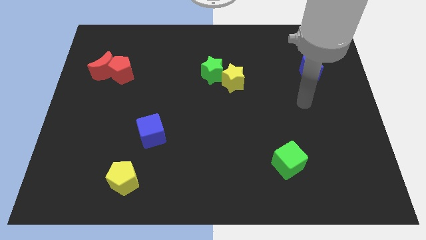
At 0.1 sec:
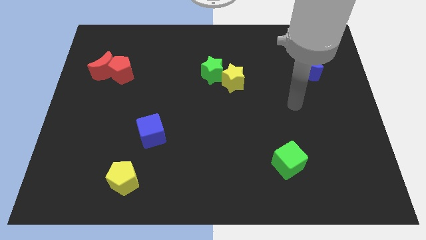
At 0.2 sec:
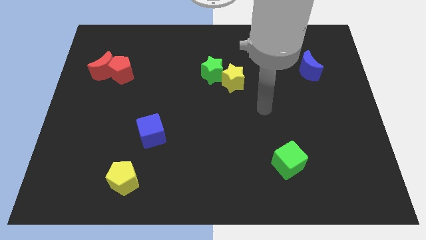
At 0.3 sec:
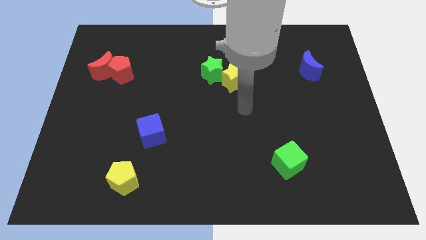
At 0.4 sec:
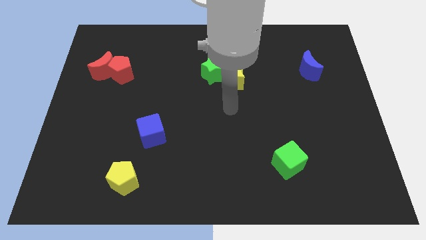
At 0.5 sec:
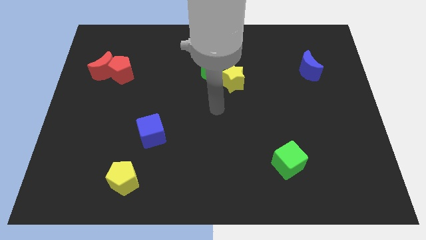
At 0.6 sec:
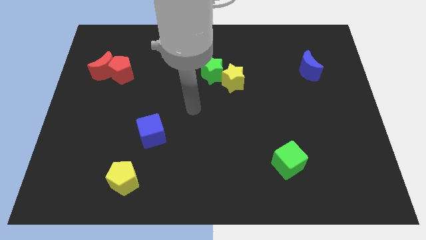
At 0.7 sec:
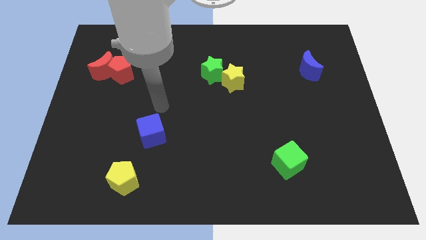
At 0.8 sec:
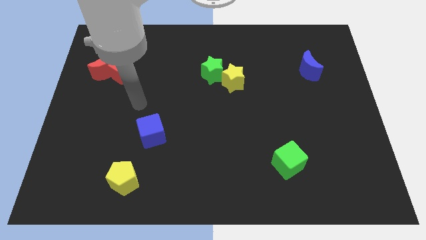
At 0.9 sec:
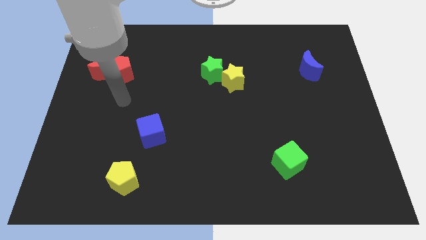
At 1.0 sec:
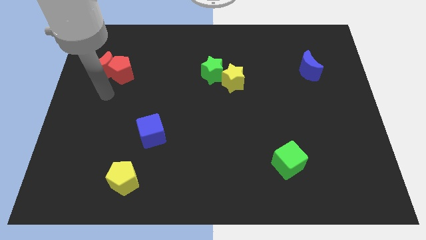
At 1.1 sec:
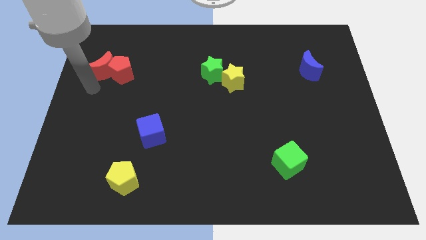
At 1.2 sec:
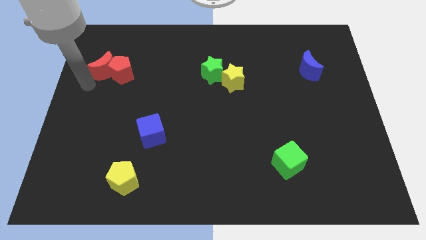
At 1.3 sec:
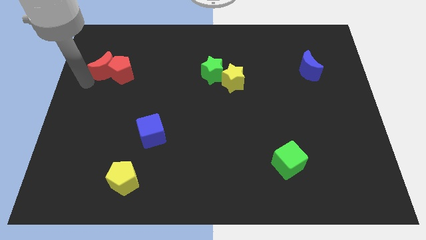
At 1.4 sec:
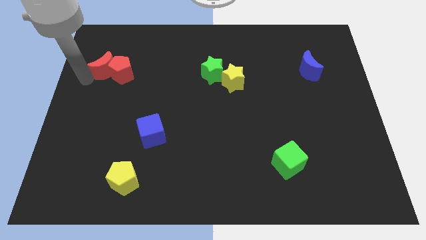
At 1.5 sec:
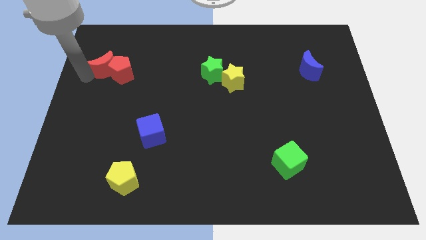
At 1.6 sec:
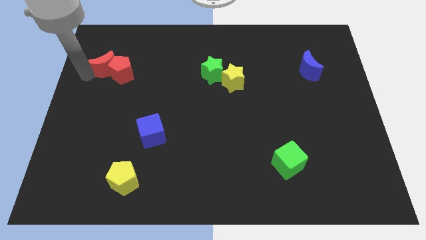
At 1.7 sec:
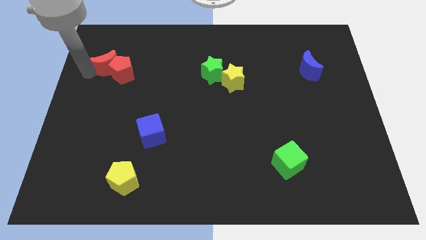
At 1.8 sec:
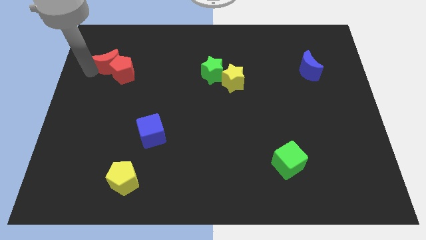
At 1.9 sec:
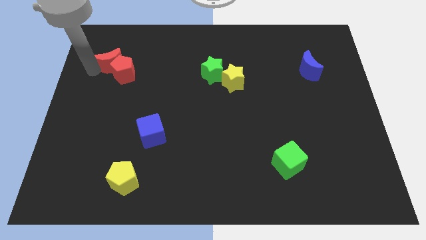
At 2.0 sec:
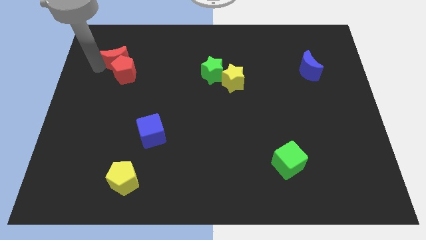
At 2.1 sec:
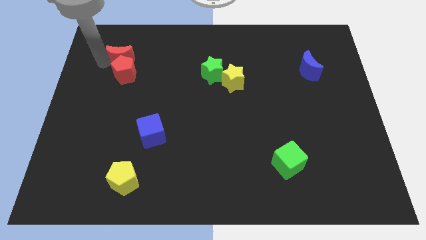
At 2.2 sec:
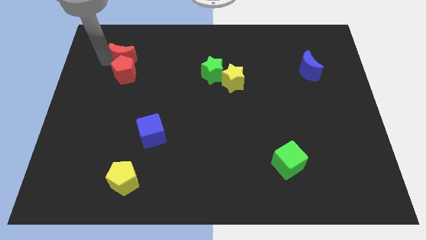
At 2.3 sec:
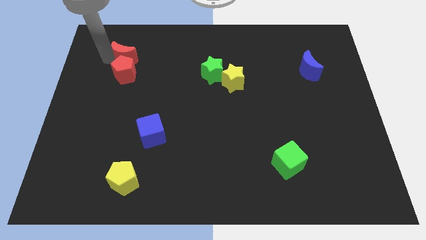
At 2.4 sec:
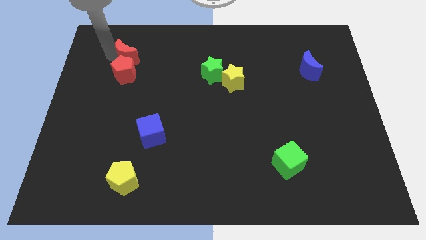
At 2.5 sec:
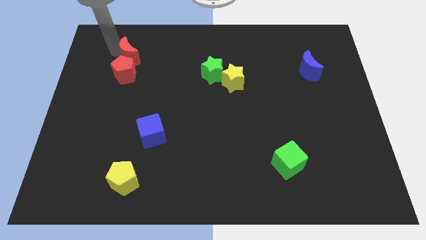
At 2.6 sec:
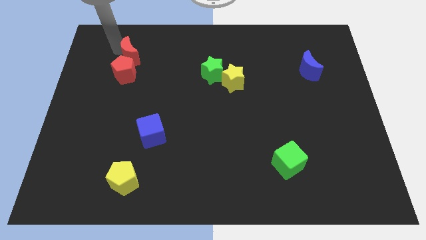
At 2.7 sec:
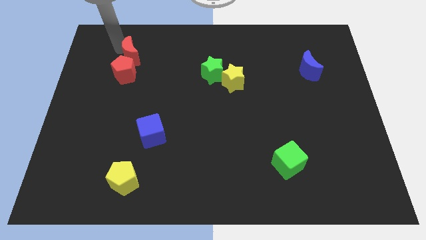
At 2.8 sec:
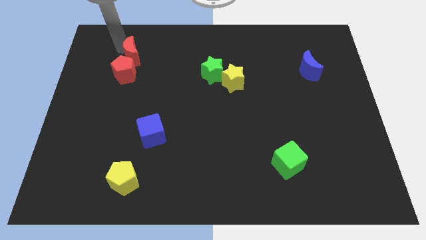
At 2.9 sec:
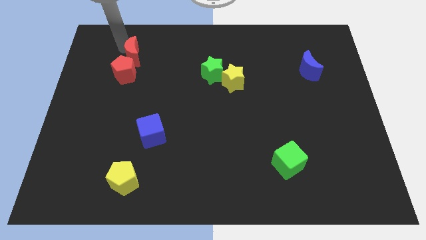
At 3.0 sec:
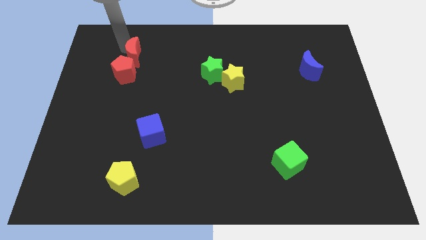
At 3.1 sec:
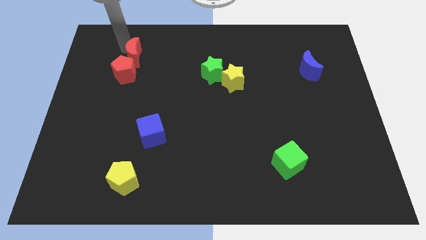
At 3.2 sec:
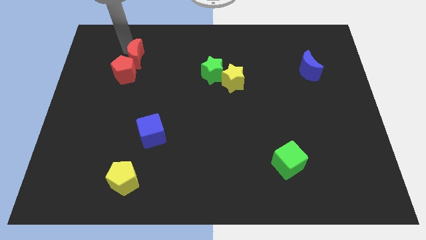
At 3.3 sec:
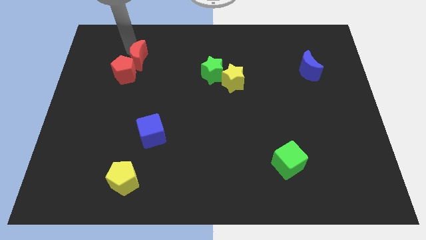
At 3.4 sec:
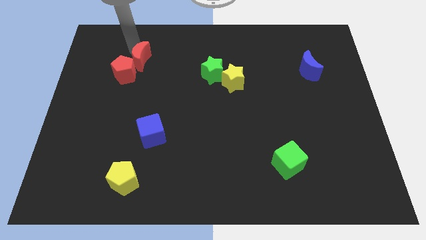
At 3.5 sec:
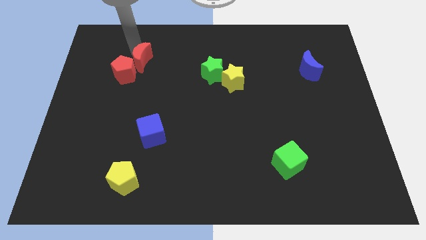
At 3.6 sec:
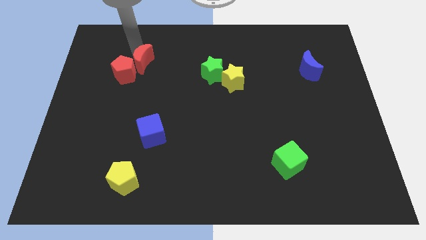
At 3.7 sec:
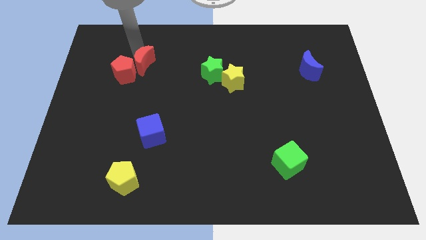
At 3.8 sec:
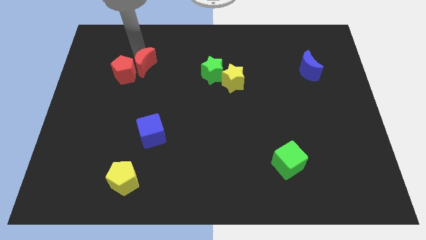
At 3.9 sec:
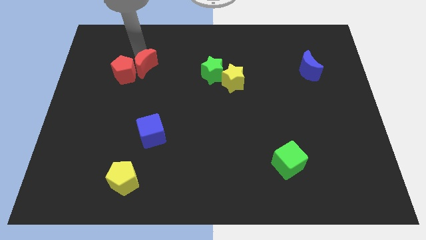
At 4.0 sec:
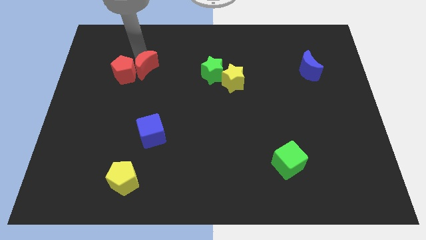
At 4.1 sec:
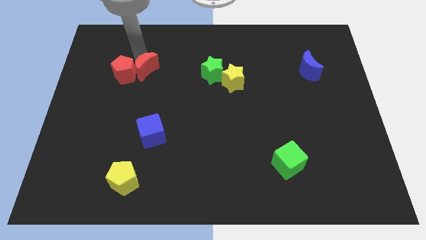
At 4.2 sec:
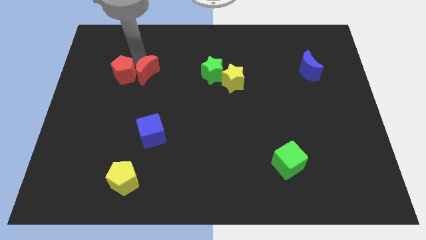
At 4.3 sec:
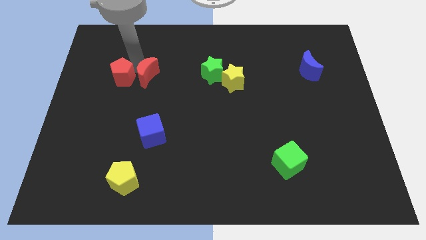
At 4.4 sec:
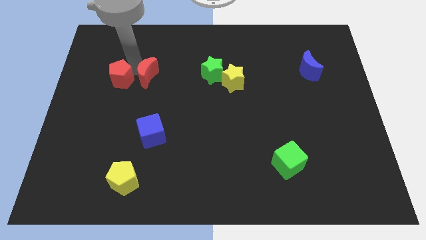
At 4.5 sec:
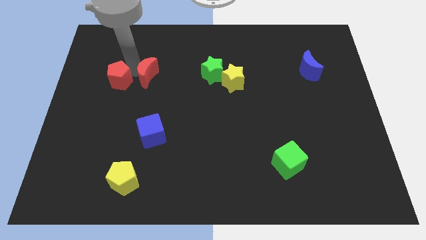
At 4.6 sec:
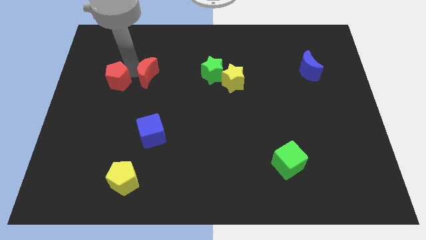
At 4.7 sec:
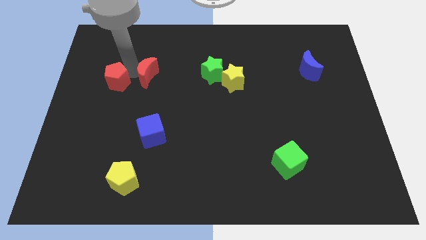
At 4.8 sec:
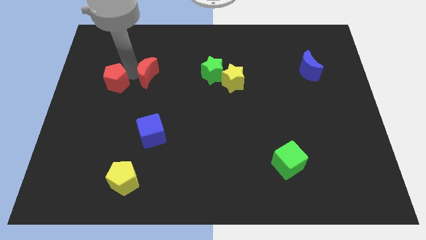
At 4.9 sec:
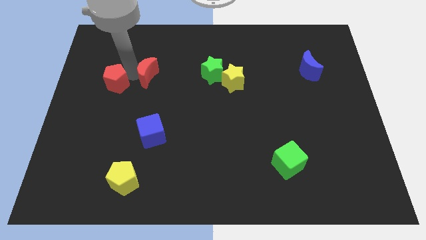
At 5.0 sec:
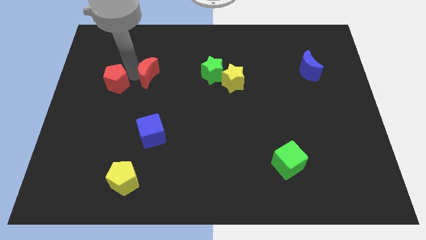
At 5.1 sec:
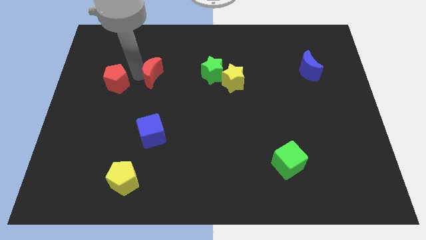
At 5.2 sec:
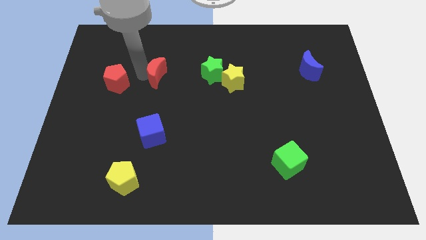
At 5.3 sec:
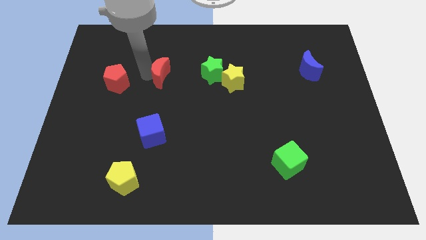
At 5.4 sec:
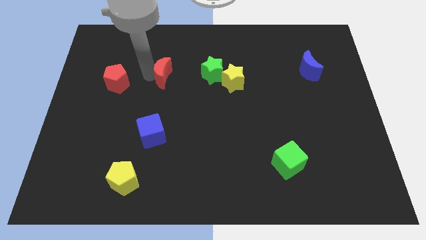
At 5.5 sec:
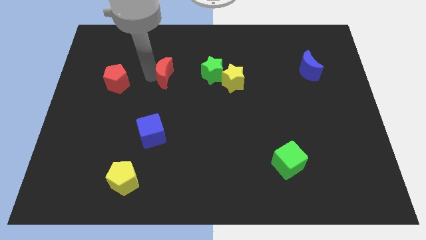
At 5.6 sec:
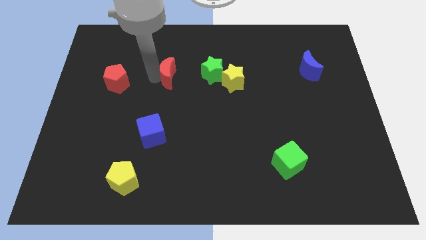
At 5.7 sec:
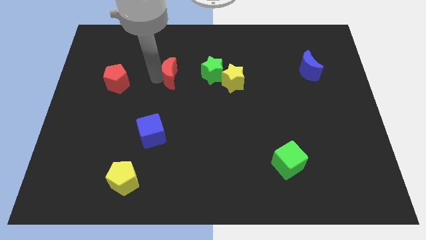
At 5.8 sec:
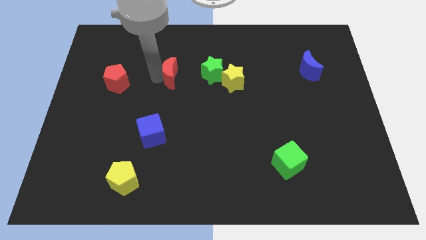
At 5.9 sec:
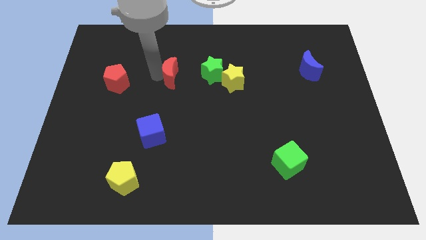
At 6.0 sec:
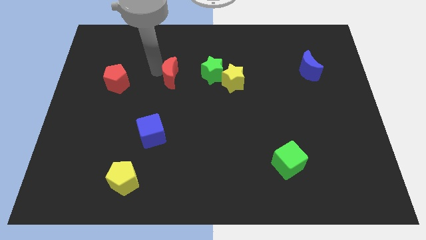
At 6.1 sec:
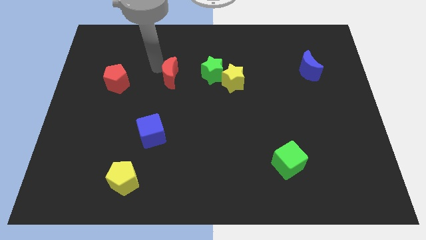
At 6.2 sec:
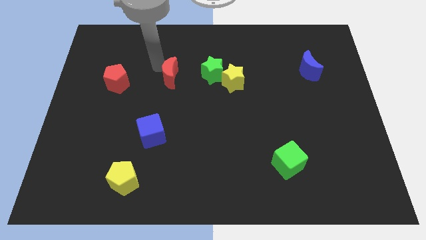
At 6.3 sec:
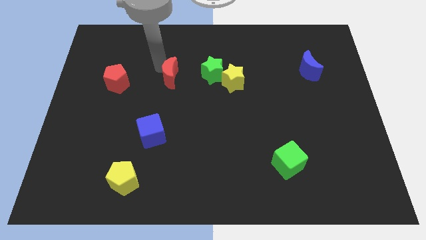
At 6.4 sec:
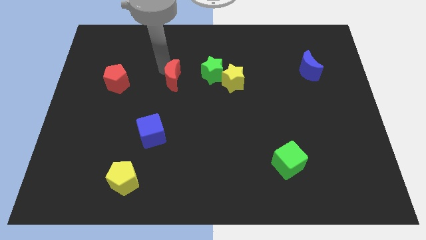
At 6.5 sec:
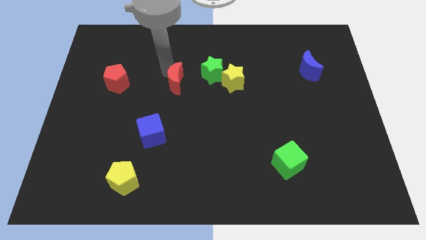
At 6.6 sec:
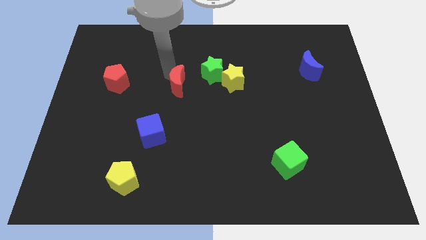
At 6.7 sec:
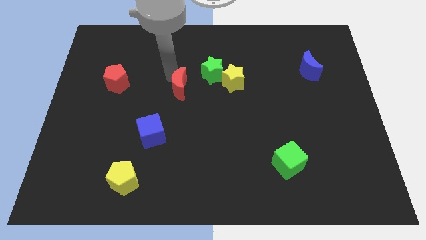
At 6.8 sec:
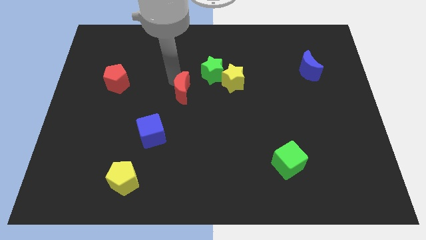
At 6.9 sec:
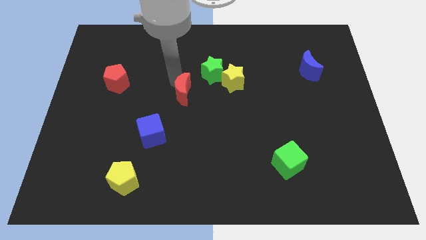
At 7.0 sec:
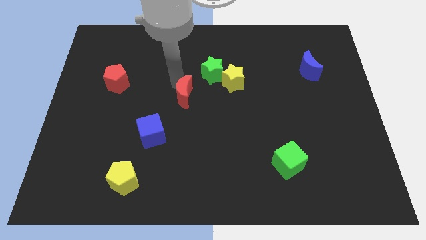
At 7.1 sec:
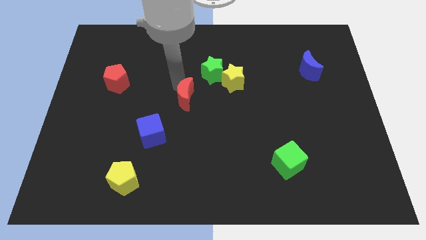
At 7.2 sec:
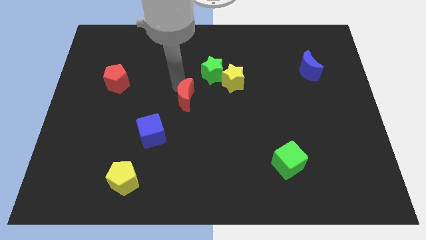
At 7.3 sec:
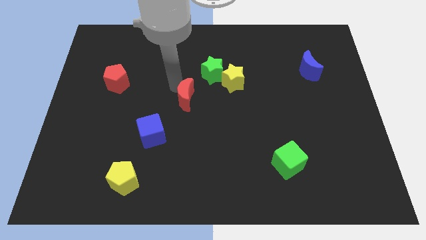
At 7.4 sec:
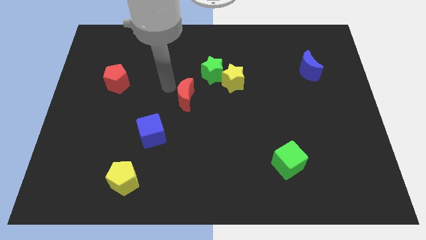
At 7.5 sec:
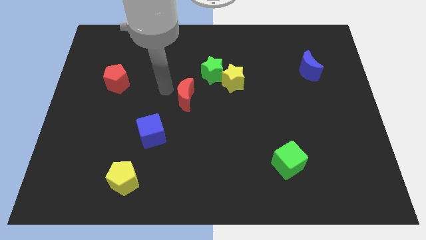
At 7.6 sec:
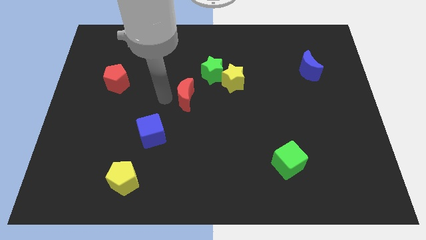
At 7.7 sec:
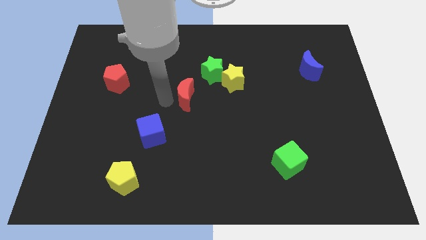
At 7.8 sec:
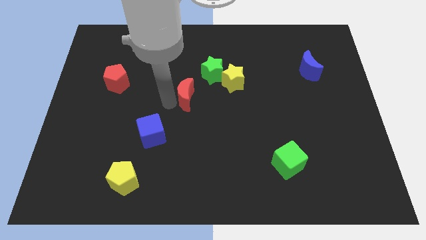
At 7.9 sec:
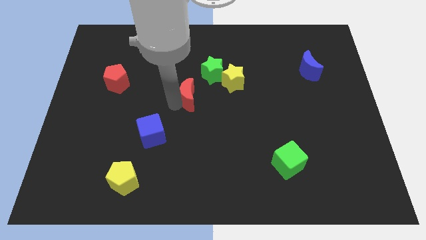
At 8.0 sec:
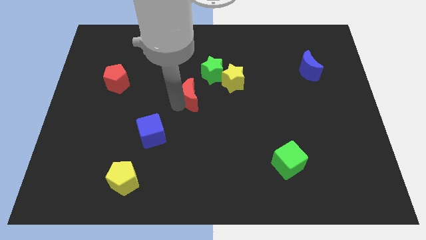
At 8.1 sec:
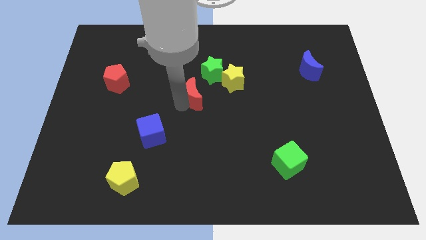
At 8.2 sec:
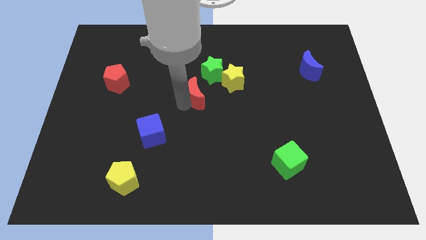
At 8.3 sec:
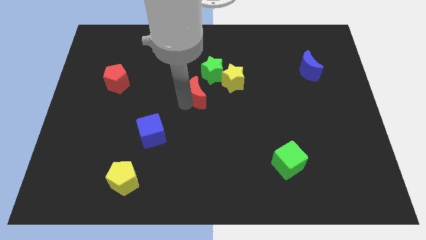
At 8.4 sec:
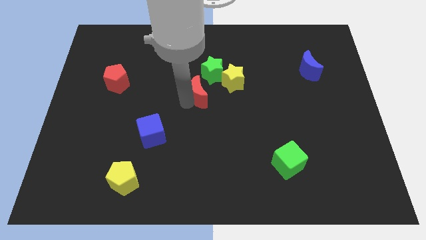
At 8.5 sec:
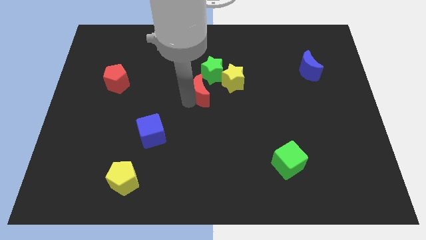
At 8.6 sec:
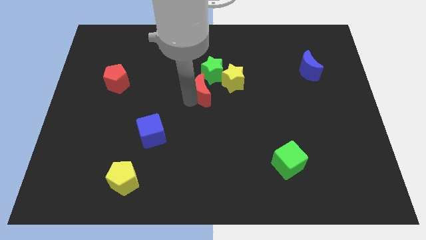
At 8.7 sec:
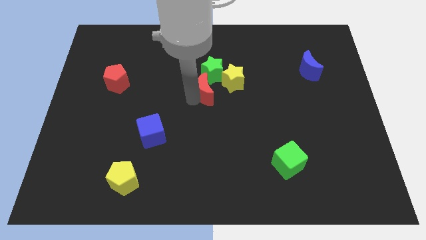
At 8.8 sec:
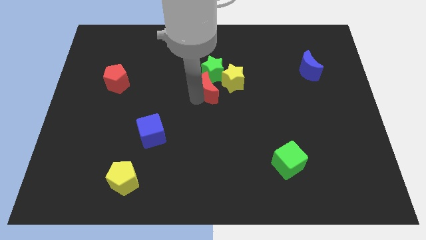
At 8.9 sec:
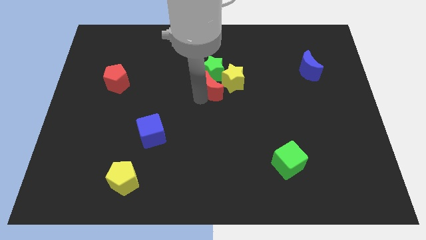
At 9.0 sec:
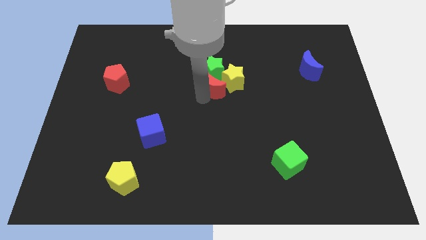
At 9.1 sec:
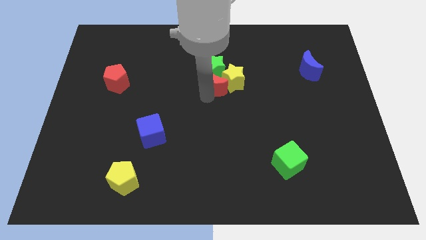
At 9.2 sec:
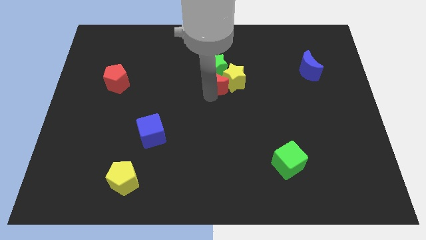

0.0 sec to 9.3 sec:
put the red moon next to the yellow star
